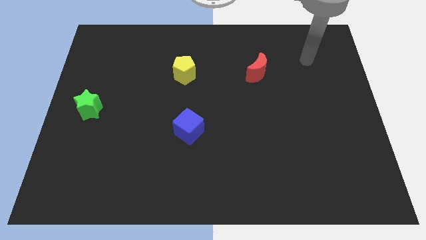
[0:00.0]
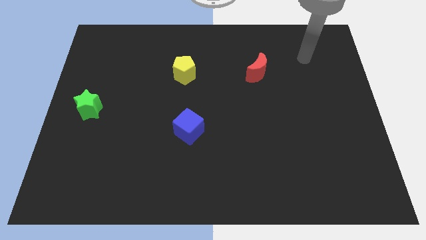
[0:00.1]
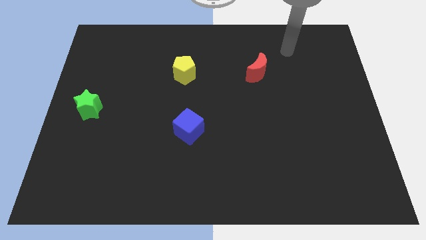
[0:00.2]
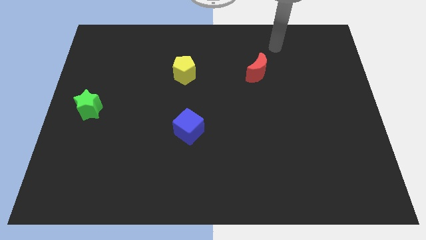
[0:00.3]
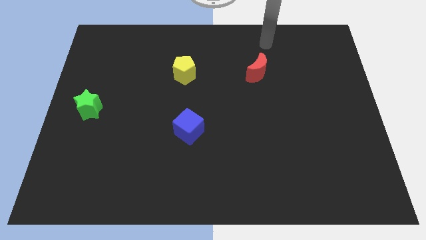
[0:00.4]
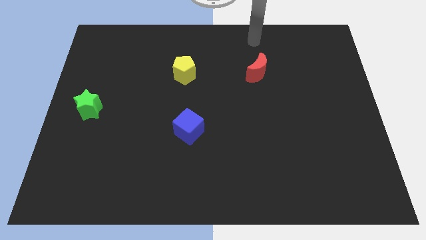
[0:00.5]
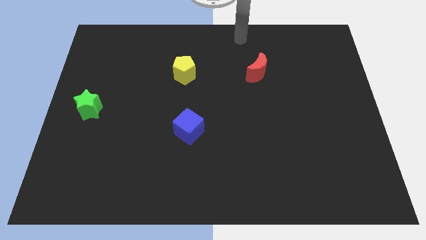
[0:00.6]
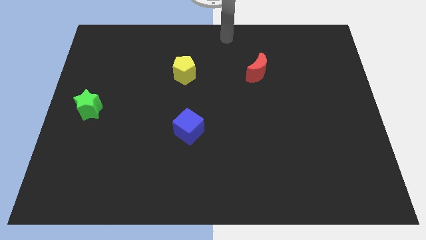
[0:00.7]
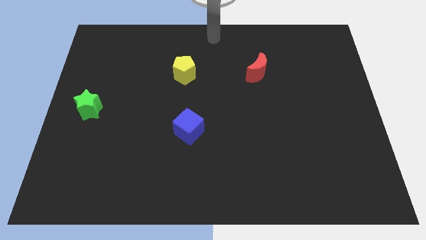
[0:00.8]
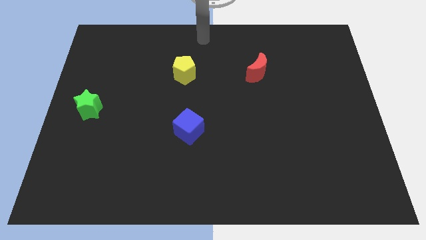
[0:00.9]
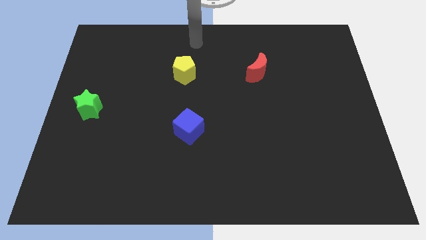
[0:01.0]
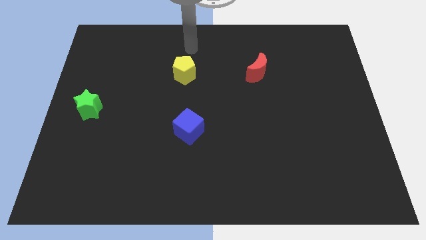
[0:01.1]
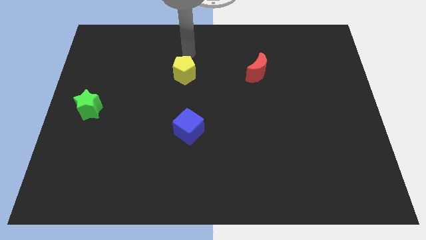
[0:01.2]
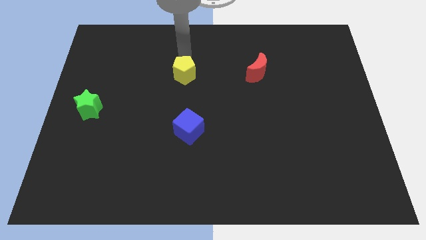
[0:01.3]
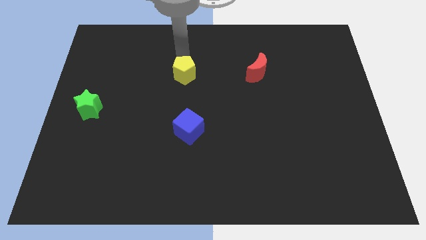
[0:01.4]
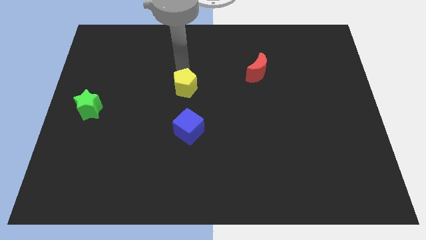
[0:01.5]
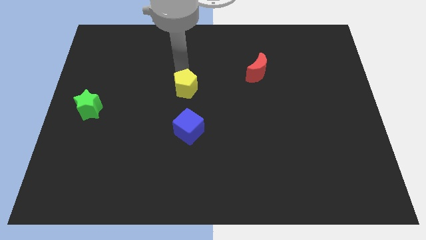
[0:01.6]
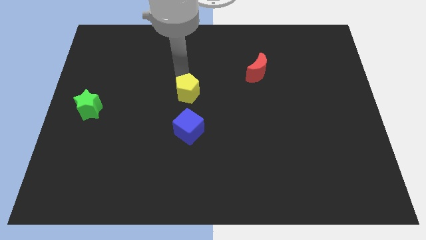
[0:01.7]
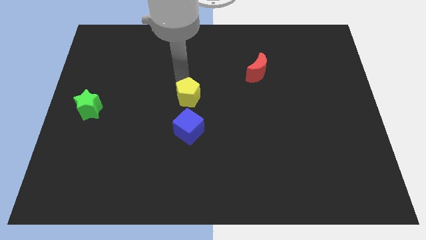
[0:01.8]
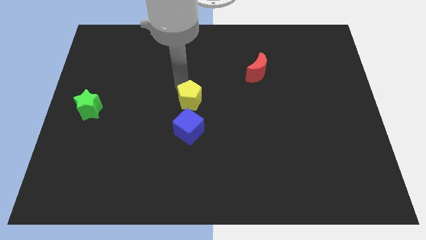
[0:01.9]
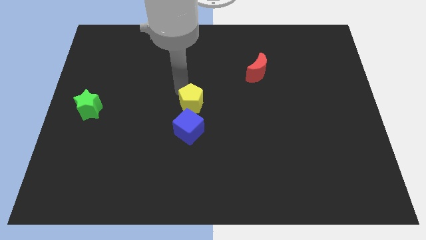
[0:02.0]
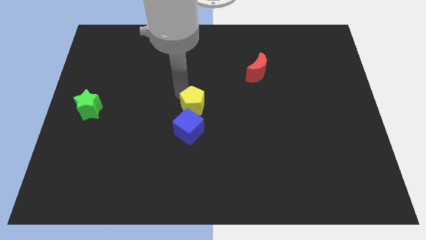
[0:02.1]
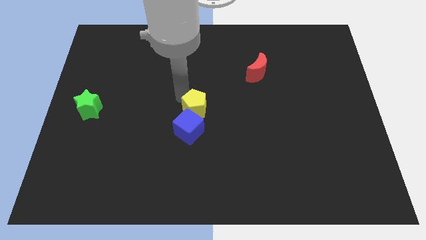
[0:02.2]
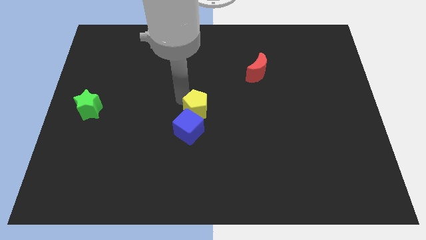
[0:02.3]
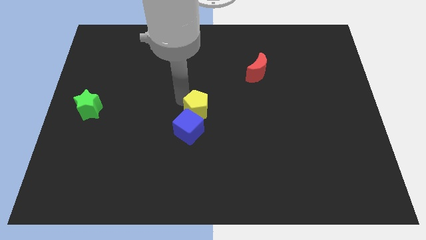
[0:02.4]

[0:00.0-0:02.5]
push the pentagon to the blue block

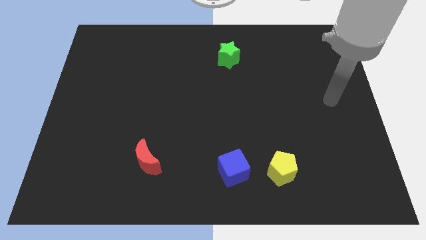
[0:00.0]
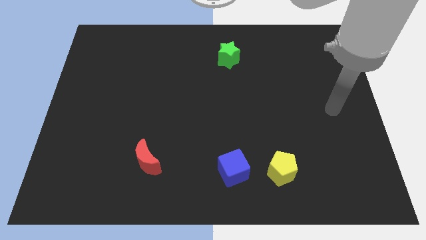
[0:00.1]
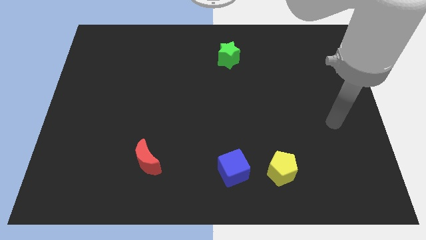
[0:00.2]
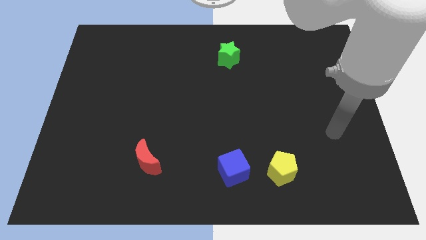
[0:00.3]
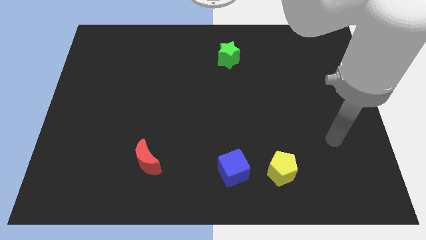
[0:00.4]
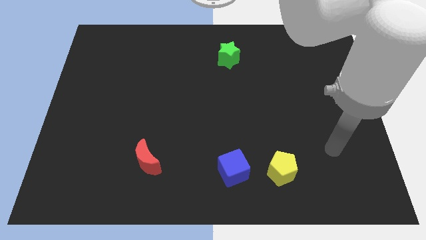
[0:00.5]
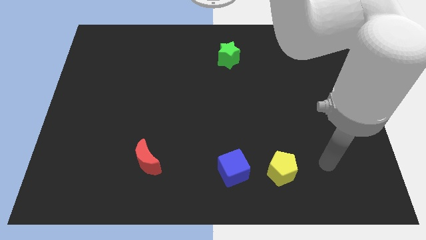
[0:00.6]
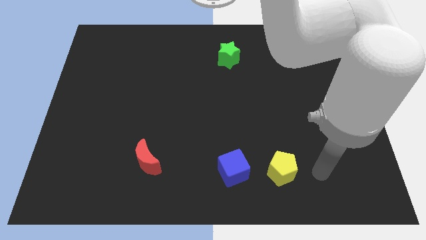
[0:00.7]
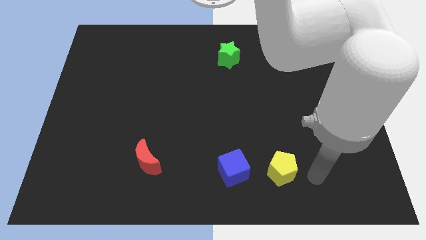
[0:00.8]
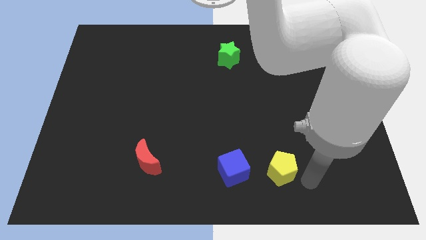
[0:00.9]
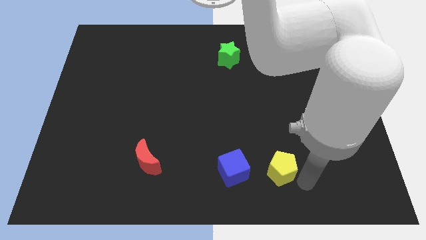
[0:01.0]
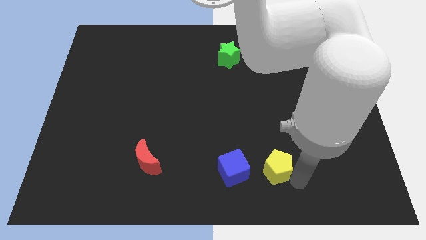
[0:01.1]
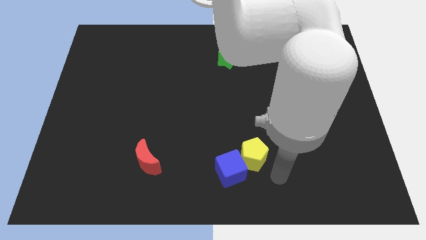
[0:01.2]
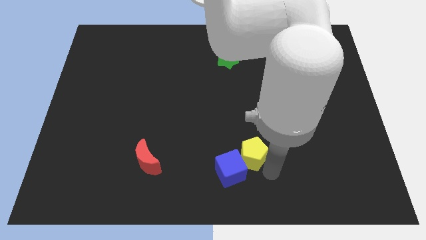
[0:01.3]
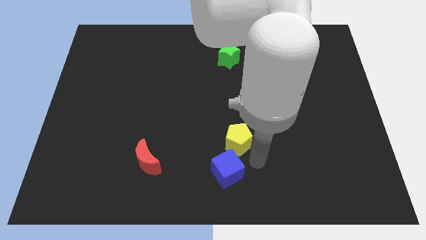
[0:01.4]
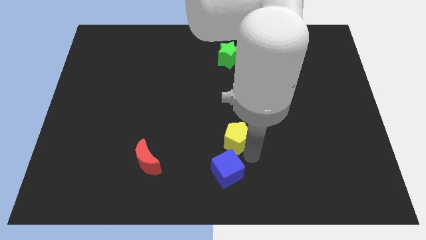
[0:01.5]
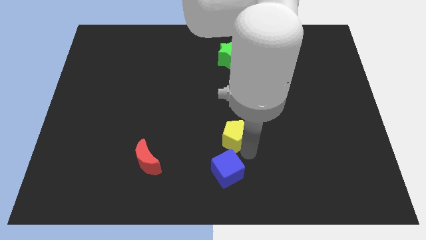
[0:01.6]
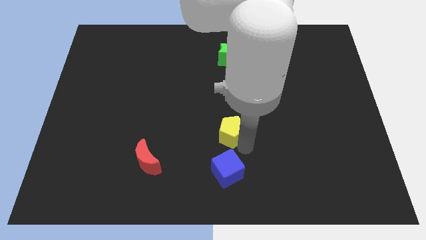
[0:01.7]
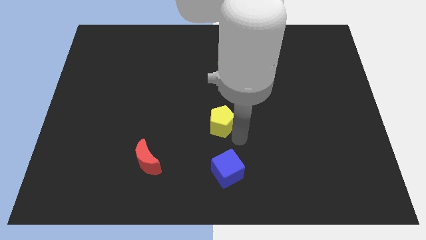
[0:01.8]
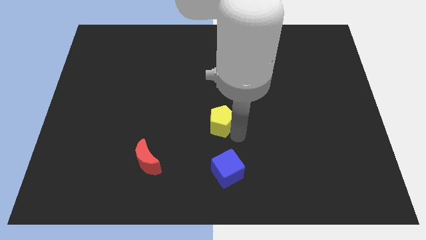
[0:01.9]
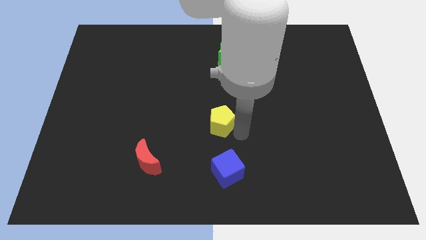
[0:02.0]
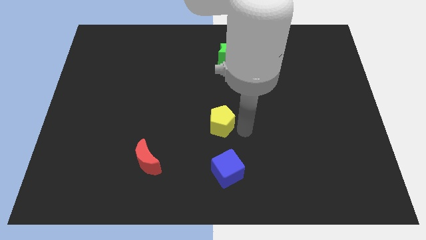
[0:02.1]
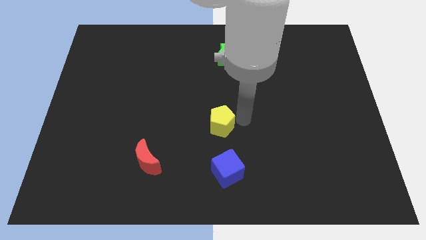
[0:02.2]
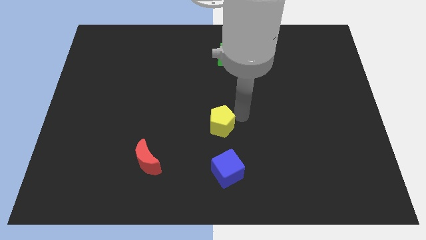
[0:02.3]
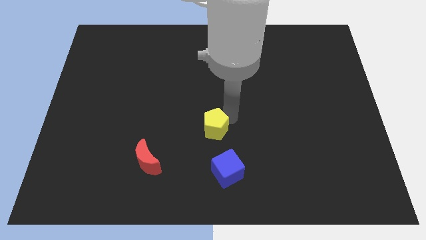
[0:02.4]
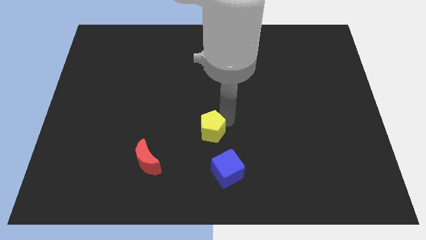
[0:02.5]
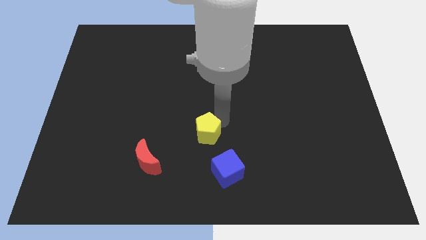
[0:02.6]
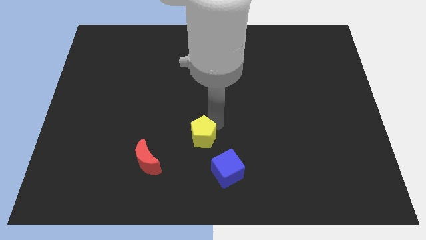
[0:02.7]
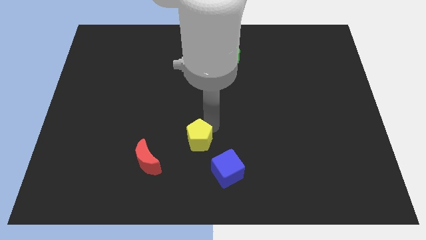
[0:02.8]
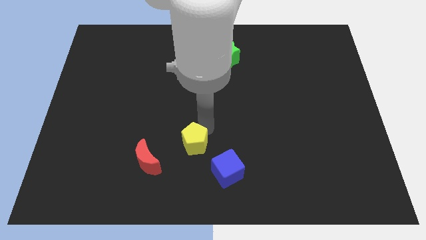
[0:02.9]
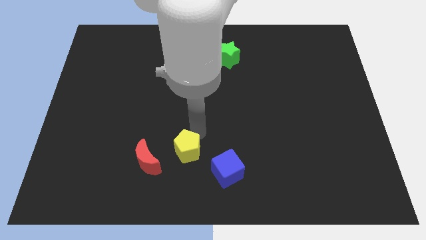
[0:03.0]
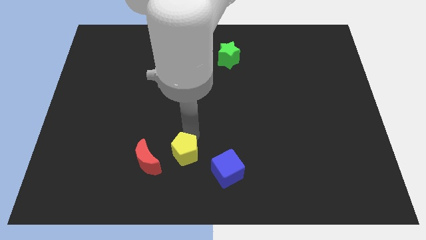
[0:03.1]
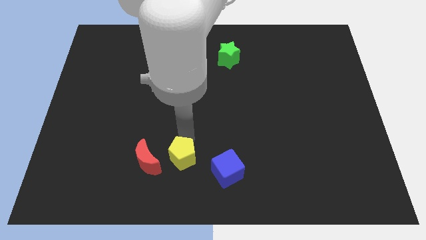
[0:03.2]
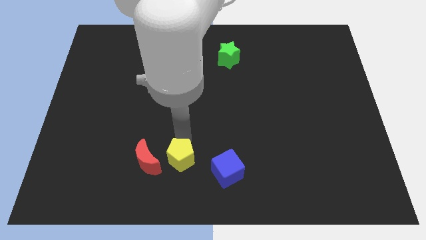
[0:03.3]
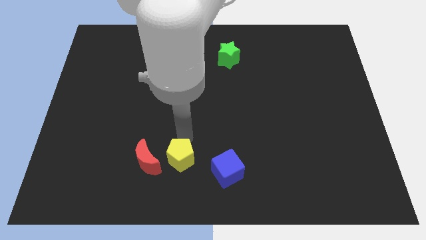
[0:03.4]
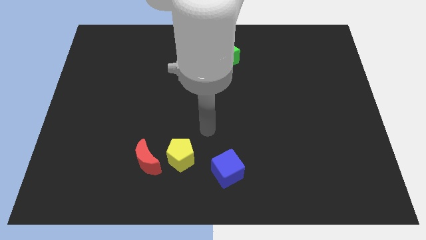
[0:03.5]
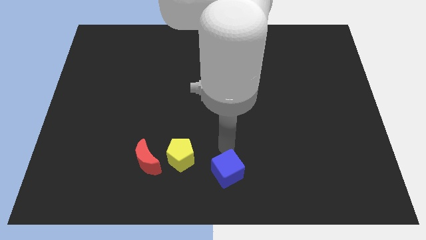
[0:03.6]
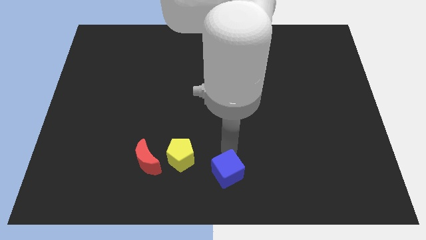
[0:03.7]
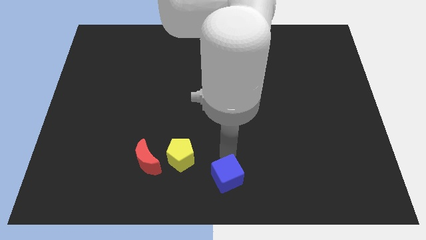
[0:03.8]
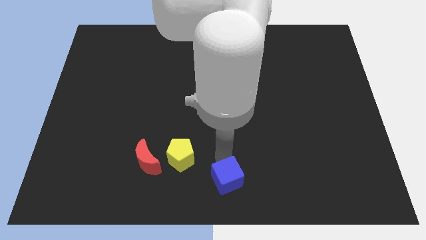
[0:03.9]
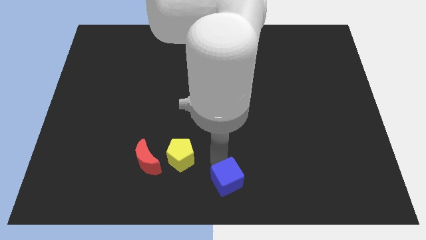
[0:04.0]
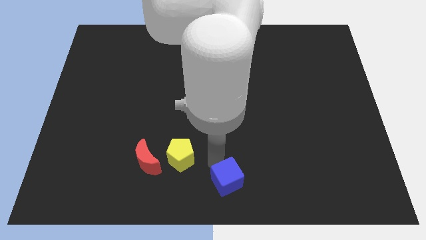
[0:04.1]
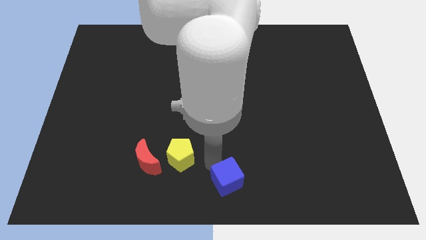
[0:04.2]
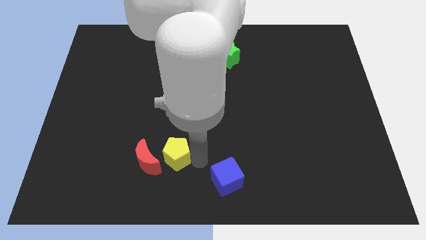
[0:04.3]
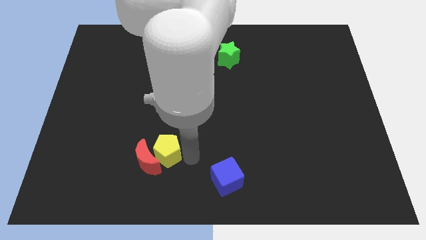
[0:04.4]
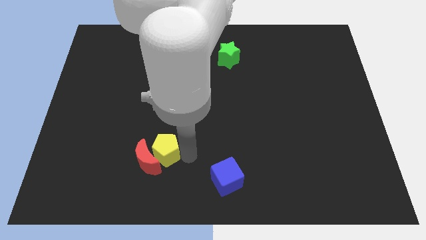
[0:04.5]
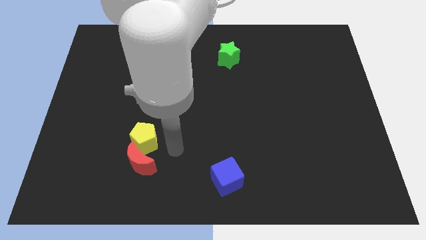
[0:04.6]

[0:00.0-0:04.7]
slide the yellow pentagon towards the moon

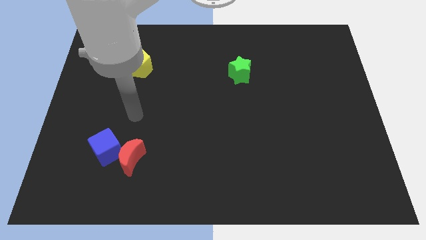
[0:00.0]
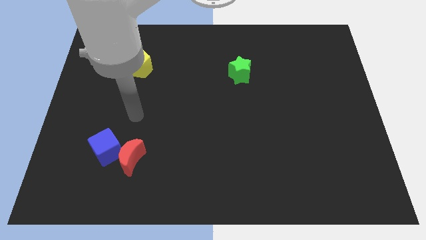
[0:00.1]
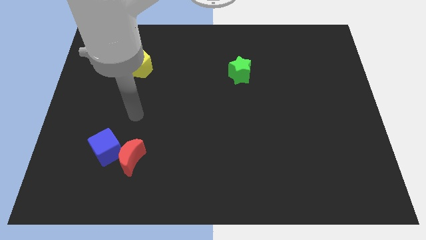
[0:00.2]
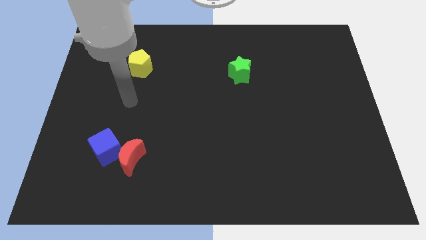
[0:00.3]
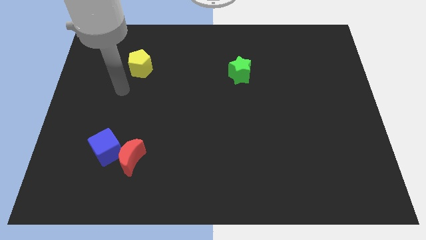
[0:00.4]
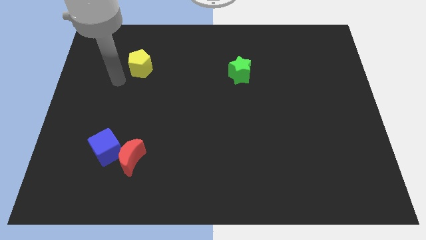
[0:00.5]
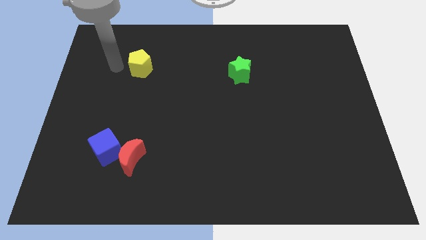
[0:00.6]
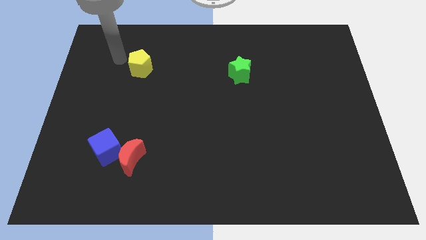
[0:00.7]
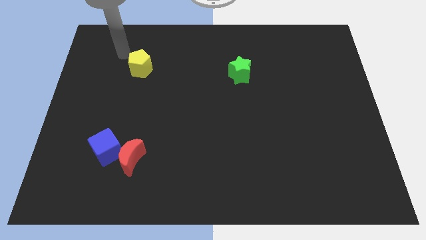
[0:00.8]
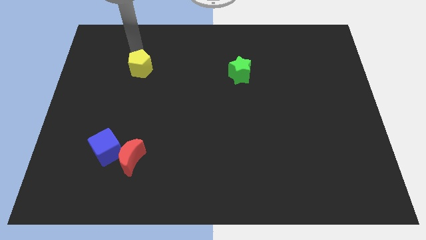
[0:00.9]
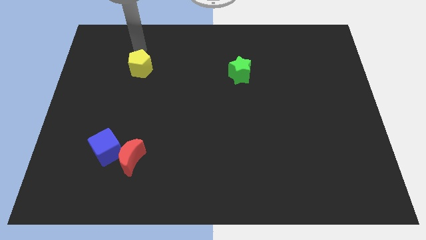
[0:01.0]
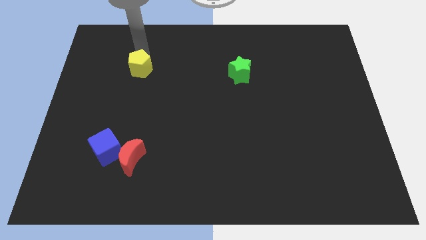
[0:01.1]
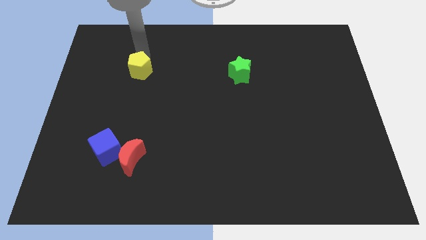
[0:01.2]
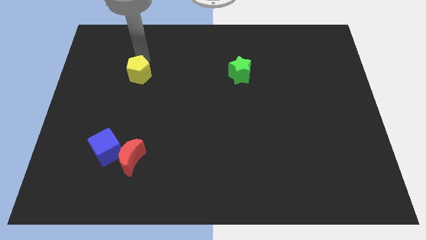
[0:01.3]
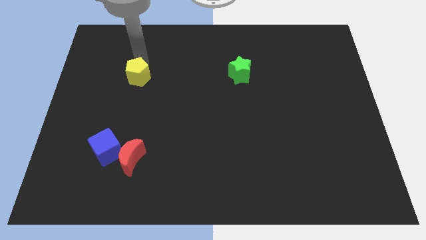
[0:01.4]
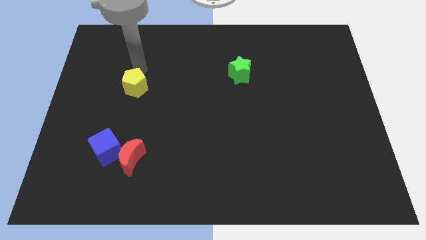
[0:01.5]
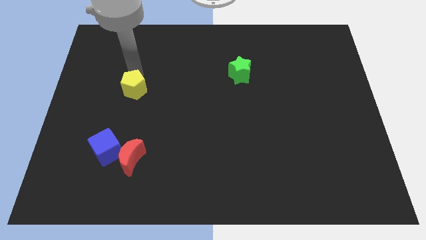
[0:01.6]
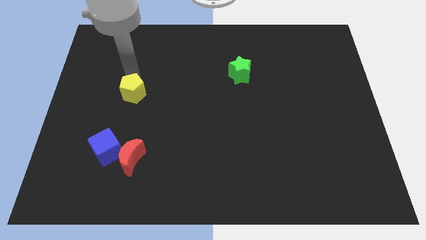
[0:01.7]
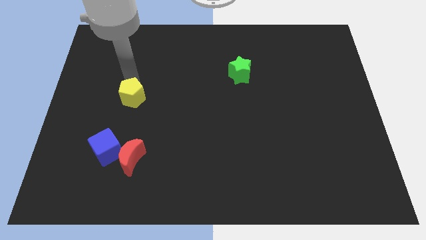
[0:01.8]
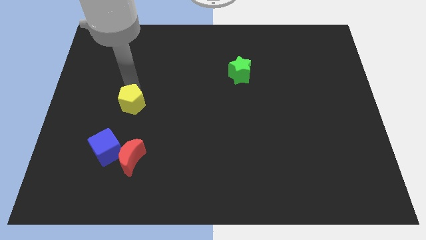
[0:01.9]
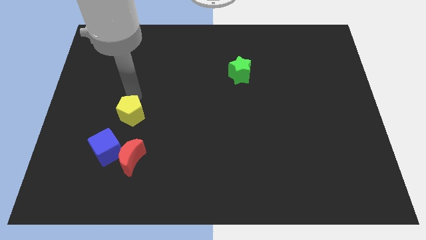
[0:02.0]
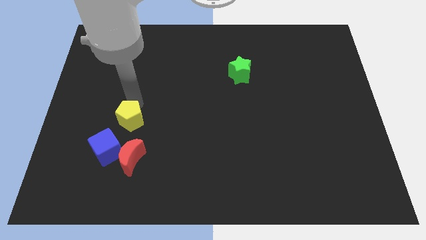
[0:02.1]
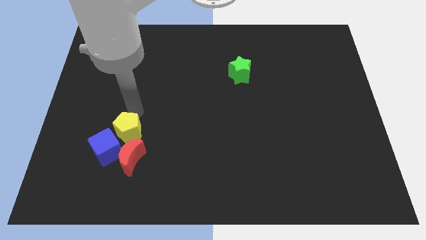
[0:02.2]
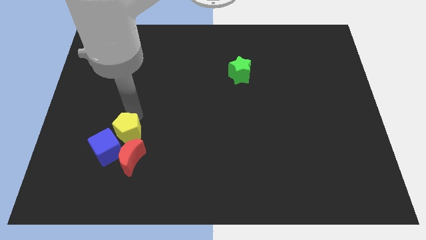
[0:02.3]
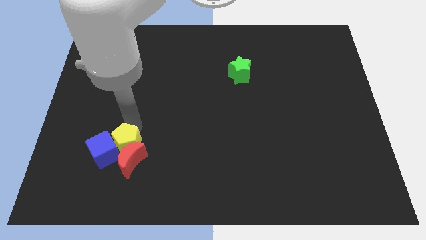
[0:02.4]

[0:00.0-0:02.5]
move the pentagon to the cube
